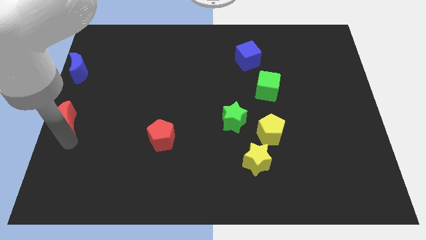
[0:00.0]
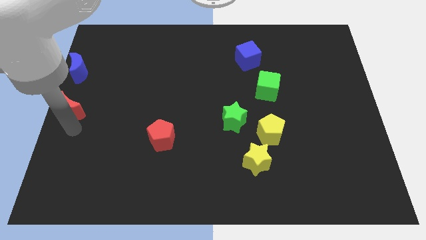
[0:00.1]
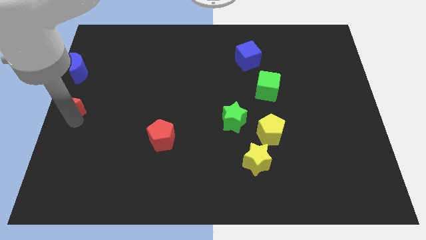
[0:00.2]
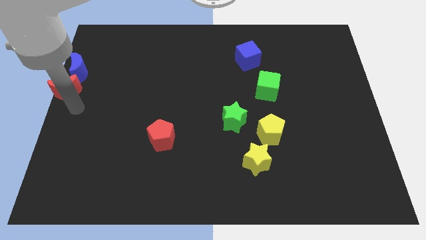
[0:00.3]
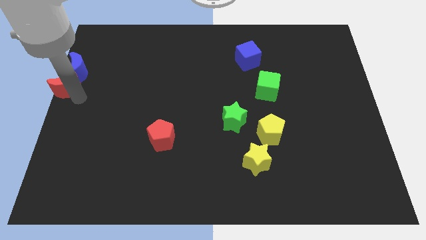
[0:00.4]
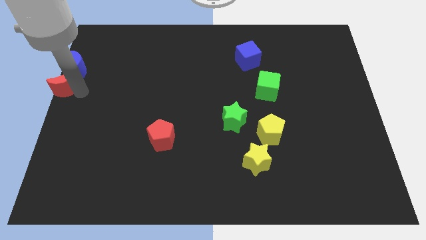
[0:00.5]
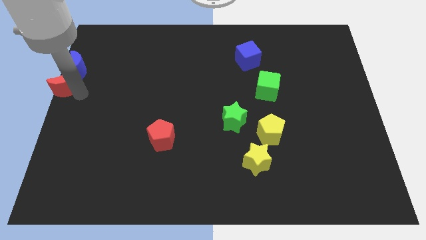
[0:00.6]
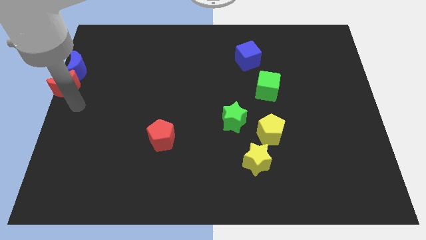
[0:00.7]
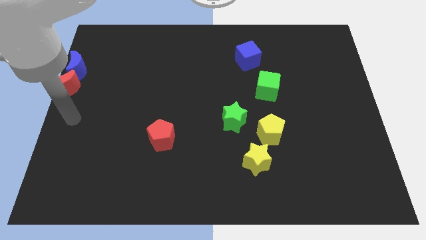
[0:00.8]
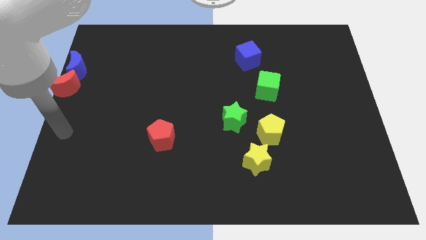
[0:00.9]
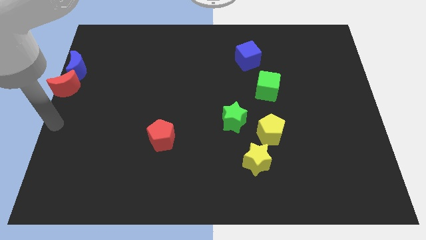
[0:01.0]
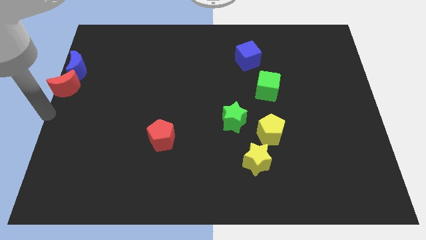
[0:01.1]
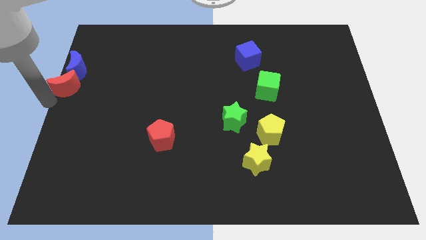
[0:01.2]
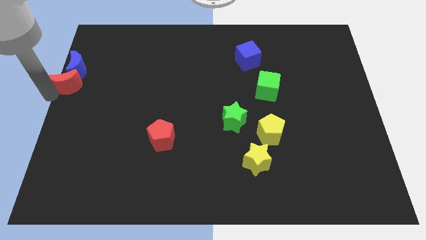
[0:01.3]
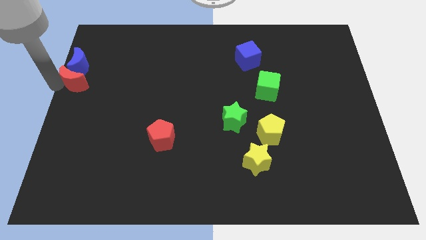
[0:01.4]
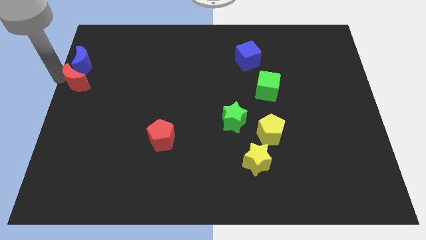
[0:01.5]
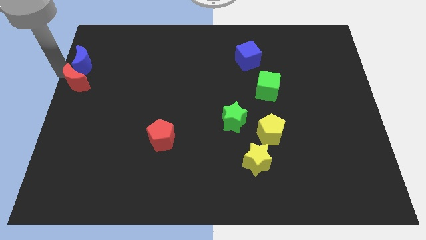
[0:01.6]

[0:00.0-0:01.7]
push the red moon into blue moon

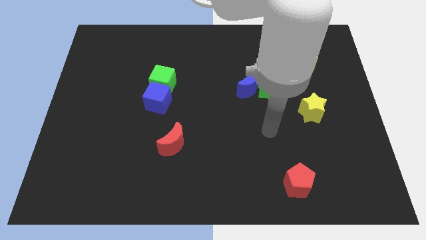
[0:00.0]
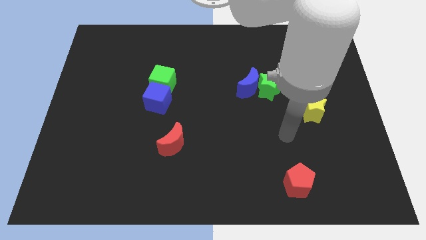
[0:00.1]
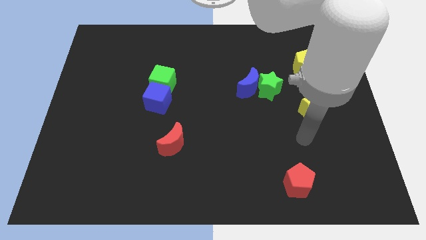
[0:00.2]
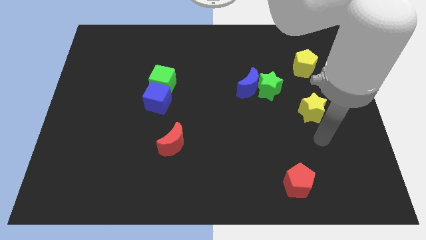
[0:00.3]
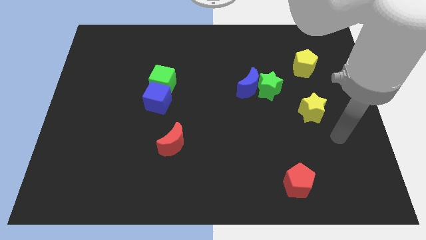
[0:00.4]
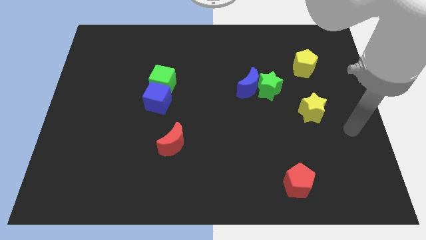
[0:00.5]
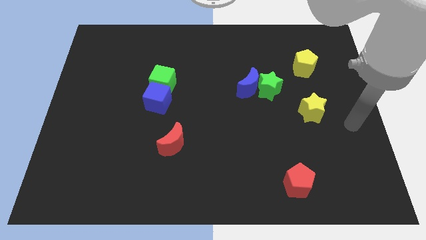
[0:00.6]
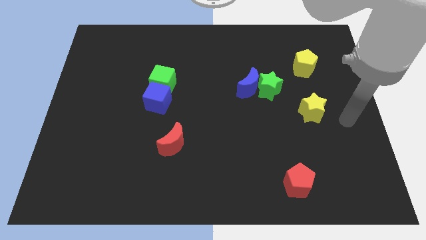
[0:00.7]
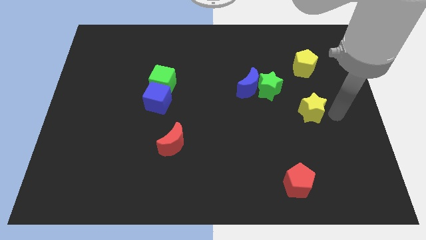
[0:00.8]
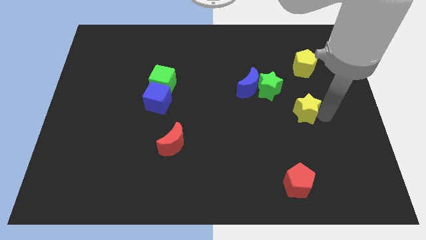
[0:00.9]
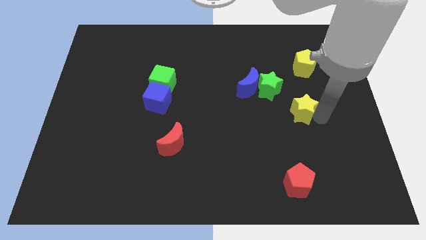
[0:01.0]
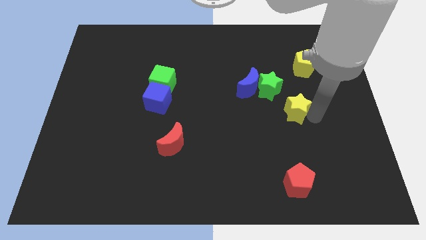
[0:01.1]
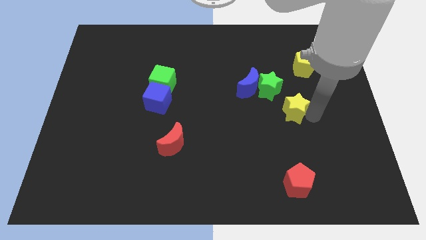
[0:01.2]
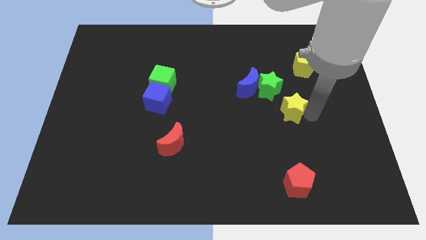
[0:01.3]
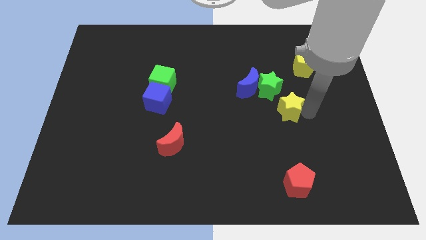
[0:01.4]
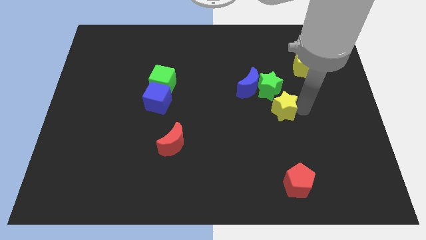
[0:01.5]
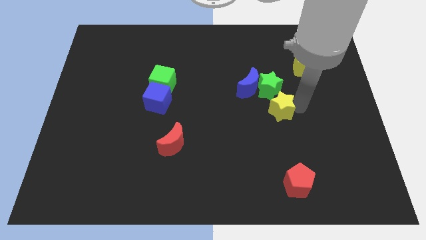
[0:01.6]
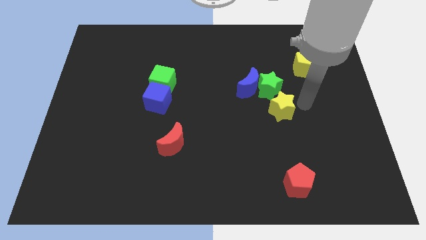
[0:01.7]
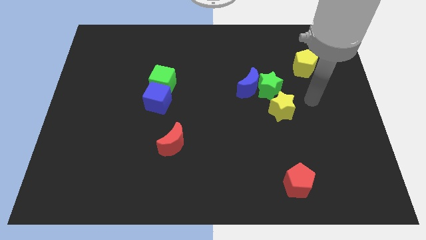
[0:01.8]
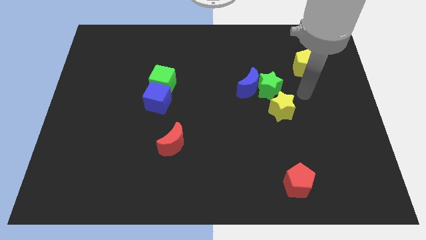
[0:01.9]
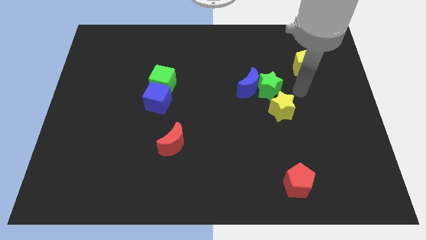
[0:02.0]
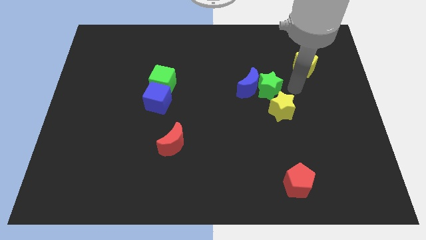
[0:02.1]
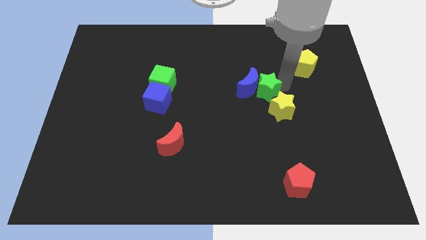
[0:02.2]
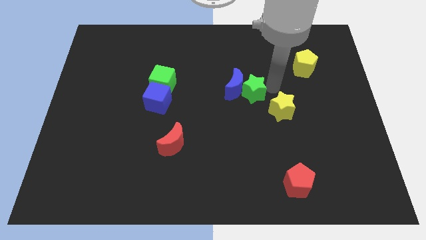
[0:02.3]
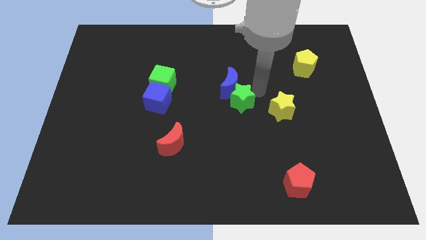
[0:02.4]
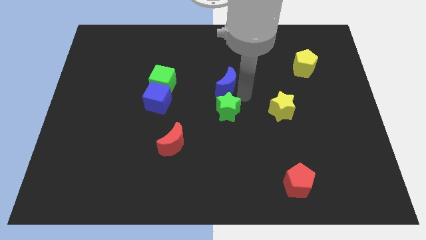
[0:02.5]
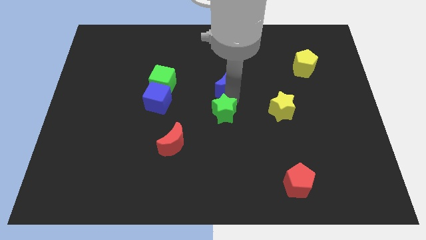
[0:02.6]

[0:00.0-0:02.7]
push green star below blue crescent

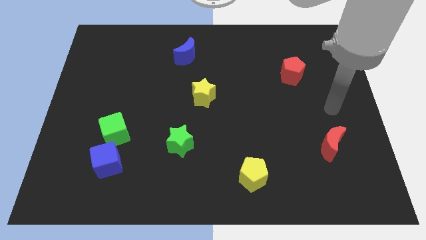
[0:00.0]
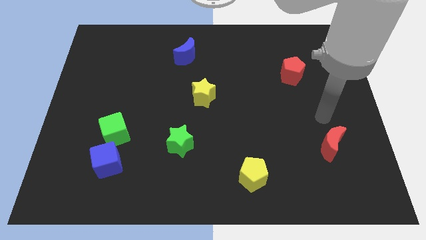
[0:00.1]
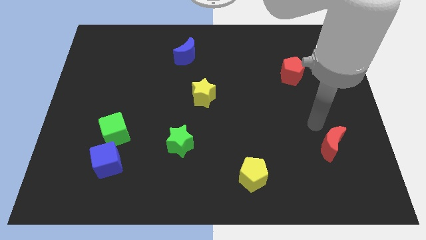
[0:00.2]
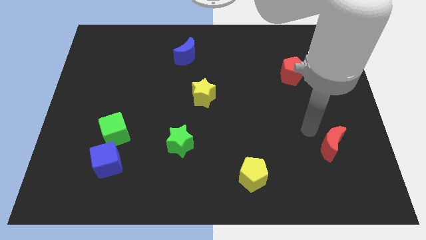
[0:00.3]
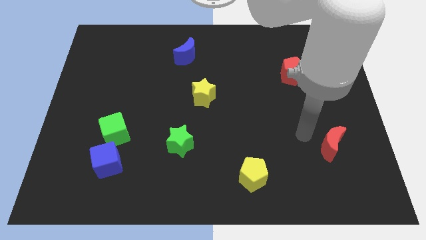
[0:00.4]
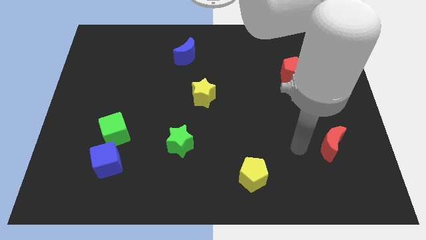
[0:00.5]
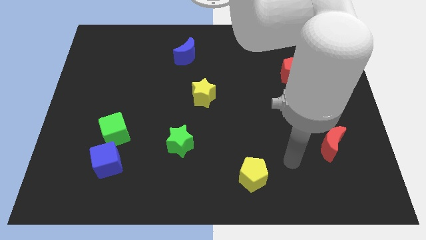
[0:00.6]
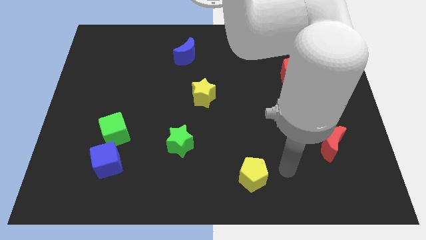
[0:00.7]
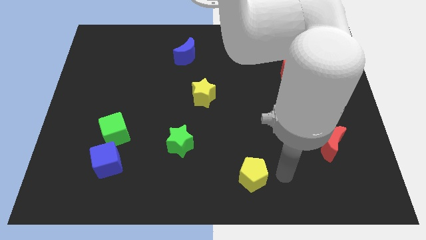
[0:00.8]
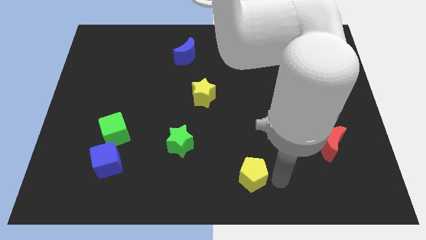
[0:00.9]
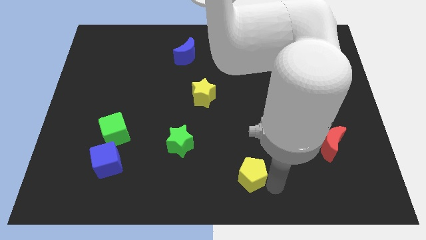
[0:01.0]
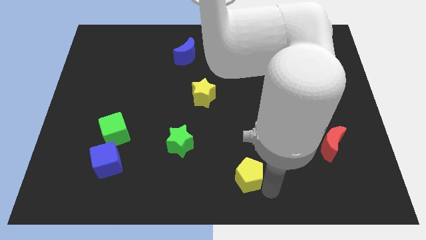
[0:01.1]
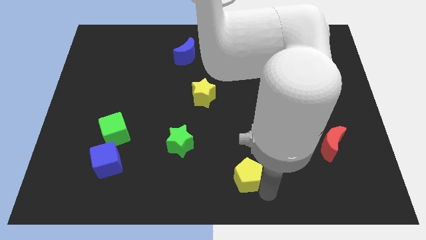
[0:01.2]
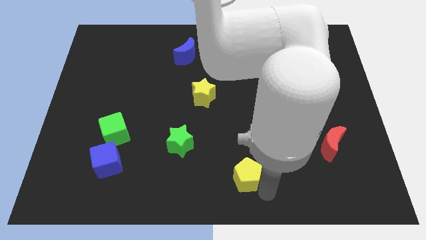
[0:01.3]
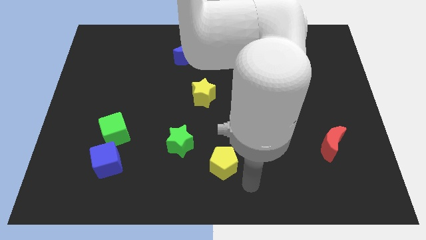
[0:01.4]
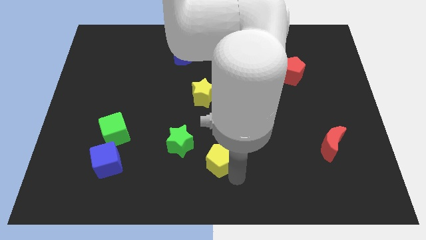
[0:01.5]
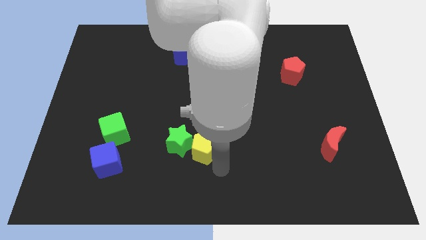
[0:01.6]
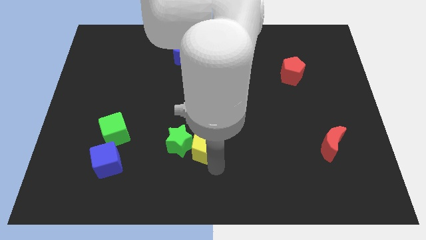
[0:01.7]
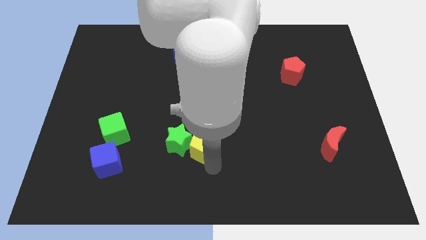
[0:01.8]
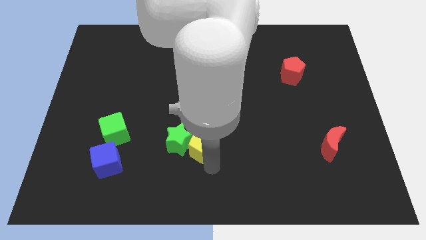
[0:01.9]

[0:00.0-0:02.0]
move the yellow pentagon close to the green star

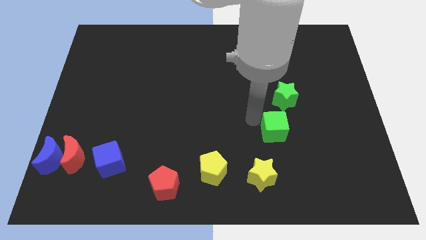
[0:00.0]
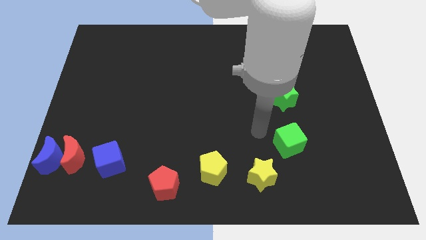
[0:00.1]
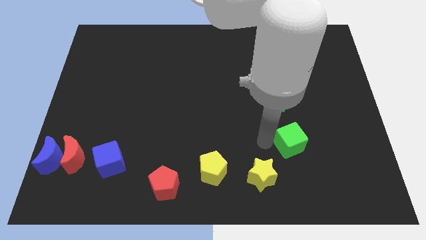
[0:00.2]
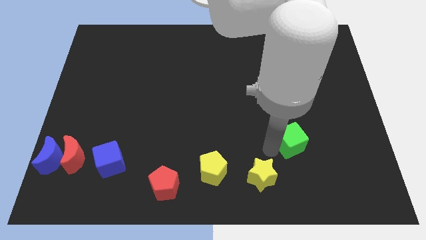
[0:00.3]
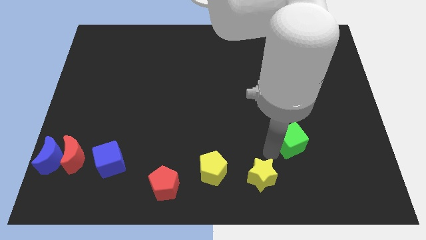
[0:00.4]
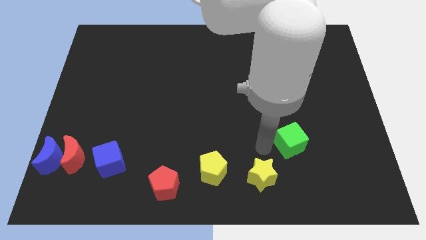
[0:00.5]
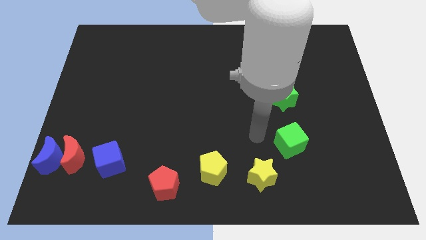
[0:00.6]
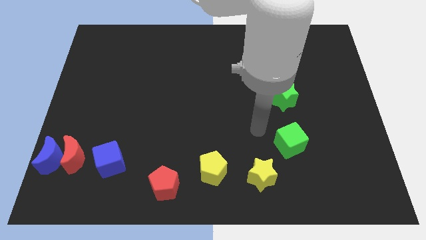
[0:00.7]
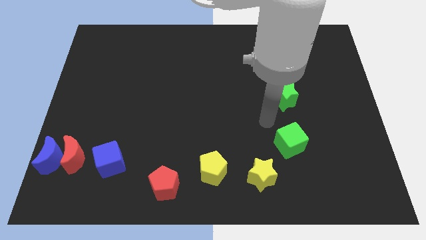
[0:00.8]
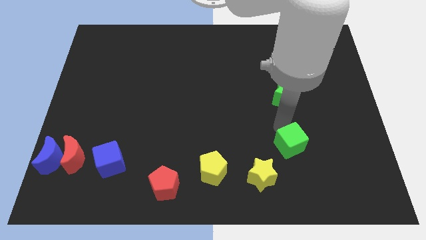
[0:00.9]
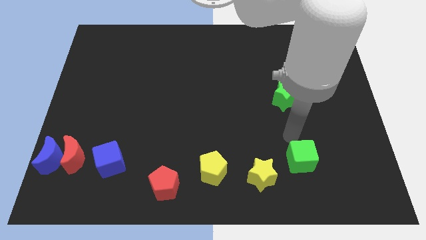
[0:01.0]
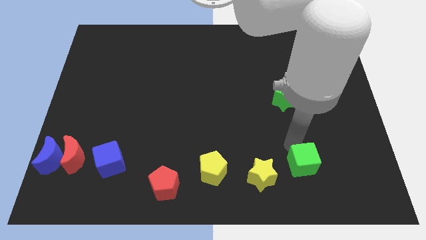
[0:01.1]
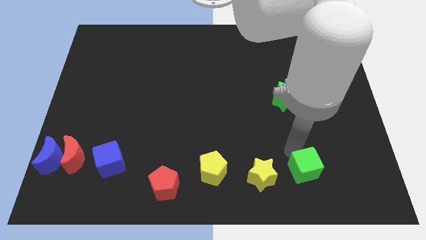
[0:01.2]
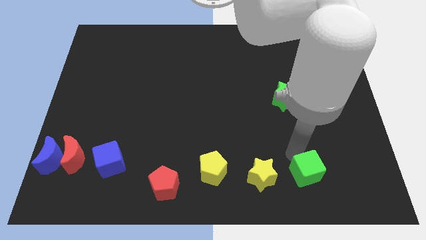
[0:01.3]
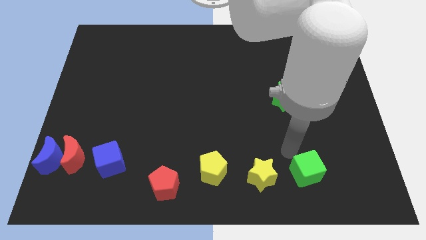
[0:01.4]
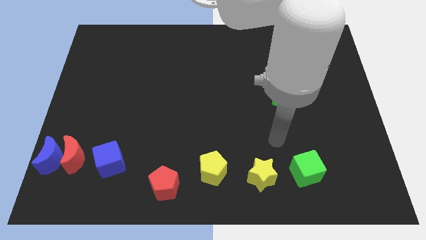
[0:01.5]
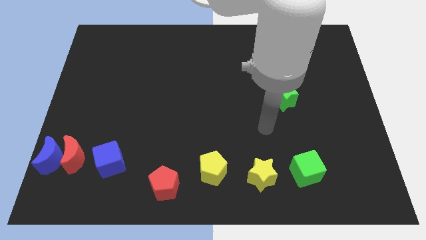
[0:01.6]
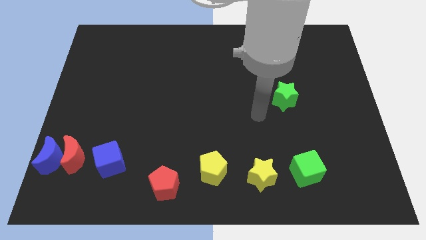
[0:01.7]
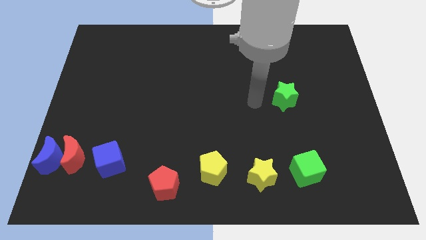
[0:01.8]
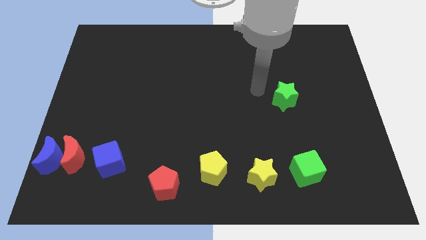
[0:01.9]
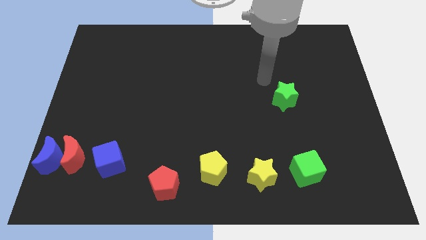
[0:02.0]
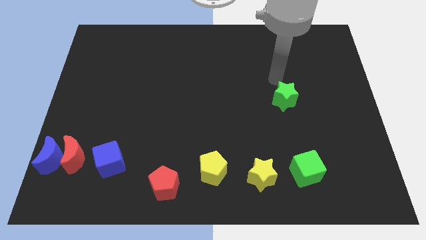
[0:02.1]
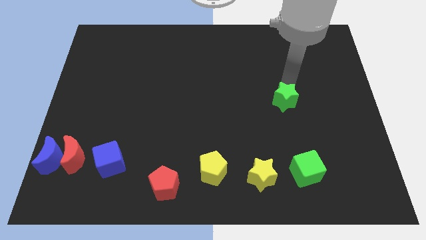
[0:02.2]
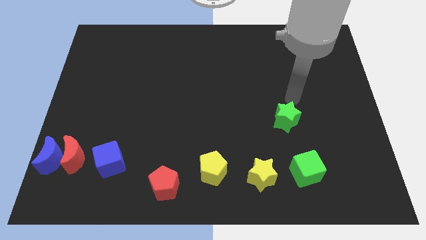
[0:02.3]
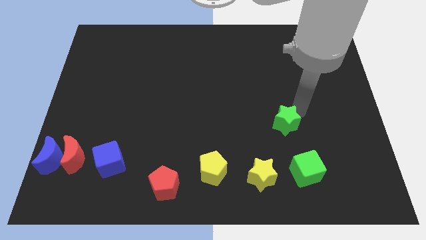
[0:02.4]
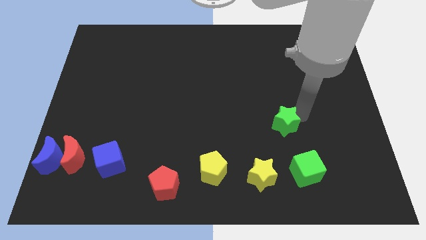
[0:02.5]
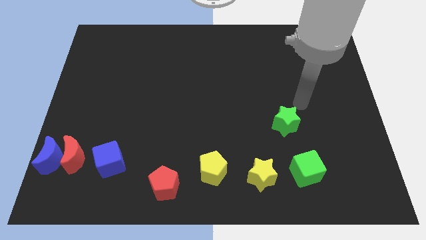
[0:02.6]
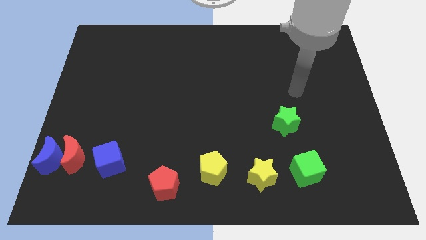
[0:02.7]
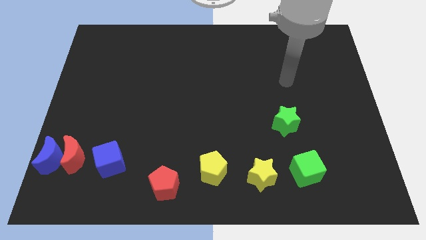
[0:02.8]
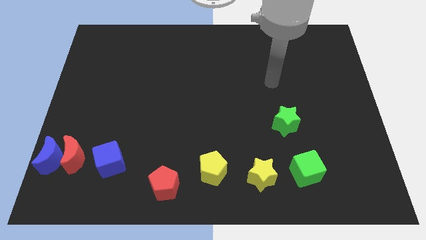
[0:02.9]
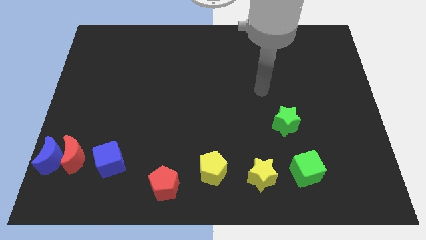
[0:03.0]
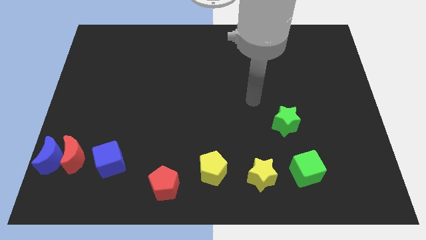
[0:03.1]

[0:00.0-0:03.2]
place green cube beside yellow star
